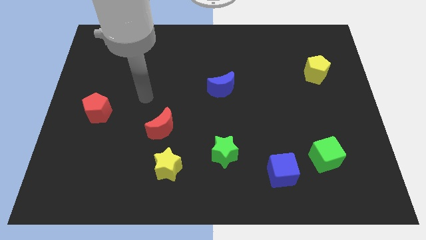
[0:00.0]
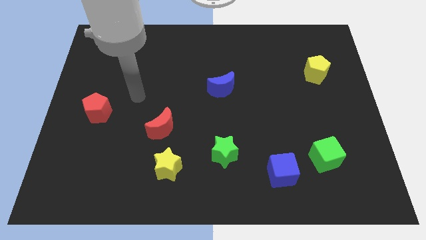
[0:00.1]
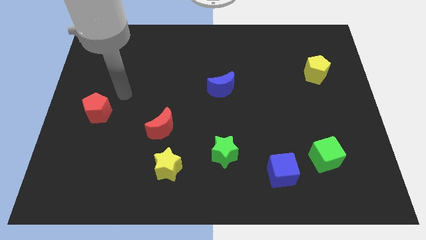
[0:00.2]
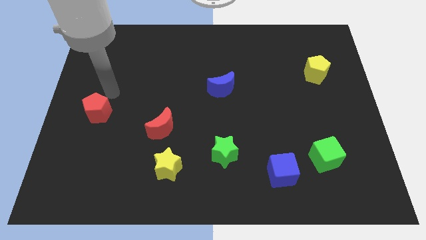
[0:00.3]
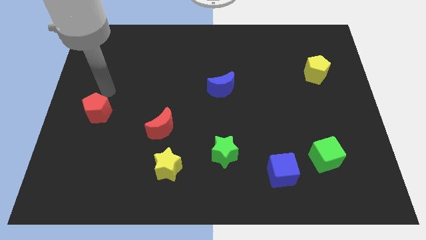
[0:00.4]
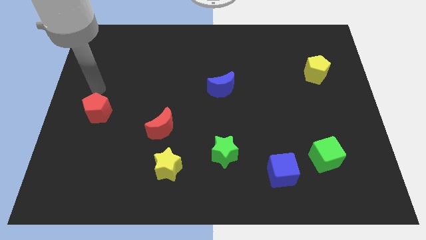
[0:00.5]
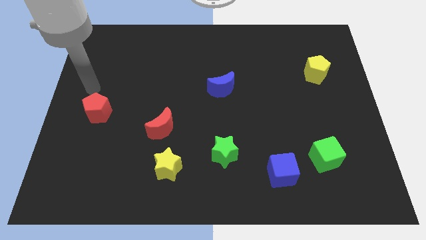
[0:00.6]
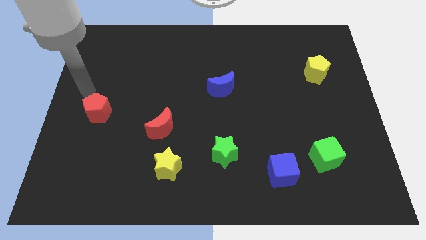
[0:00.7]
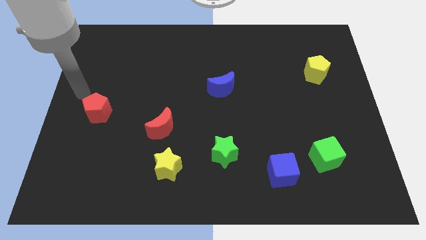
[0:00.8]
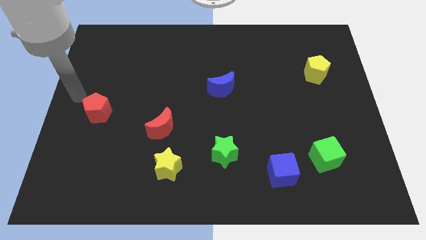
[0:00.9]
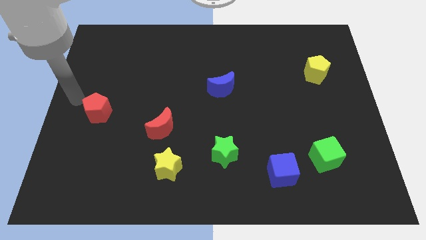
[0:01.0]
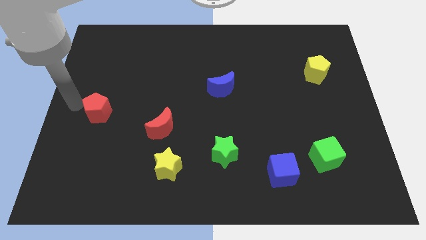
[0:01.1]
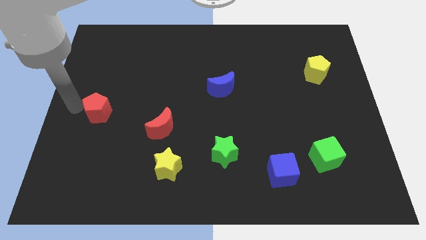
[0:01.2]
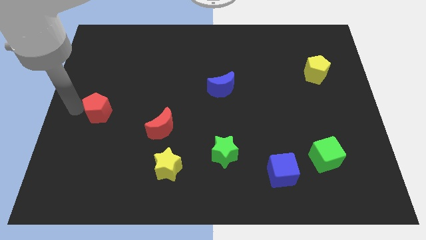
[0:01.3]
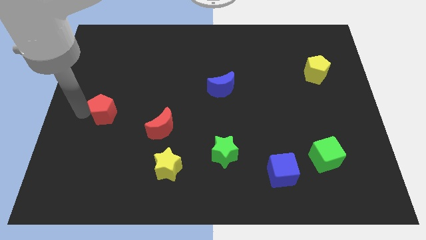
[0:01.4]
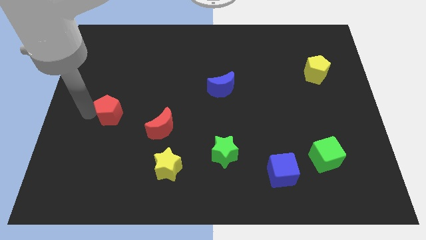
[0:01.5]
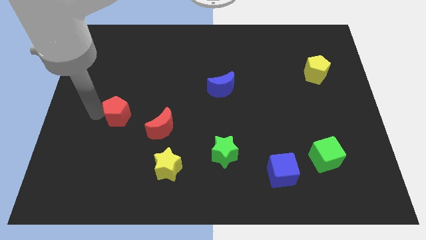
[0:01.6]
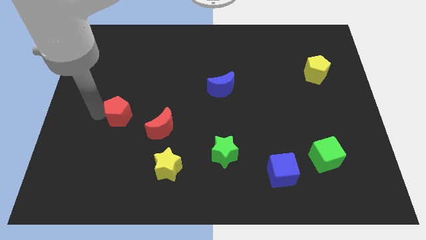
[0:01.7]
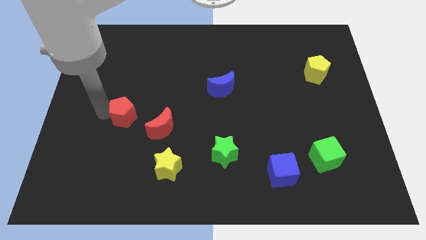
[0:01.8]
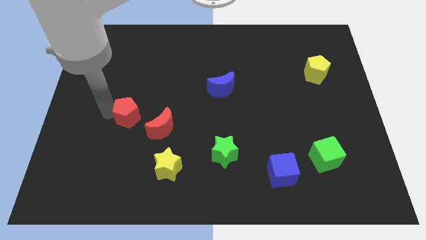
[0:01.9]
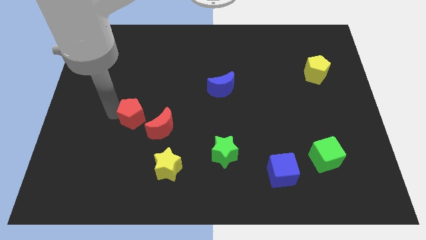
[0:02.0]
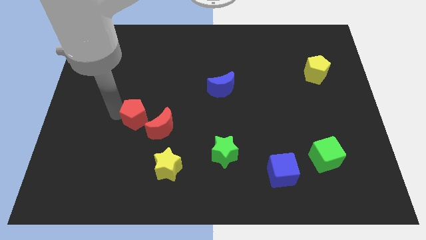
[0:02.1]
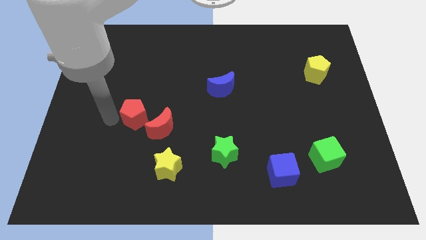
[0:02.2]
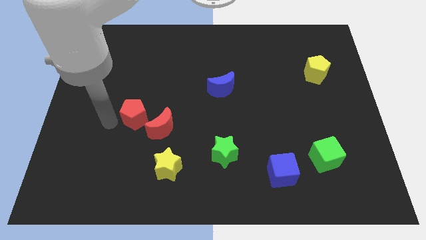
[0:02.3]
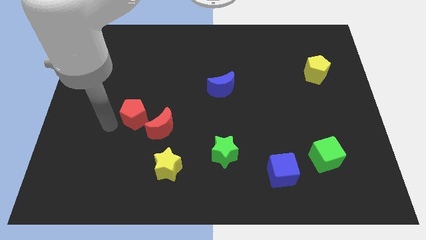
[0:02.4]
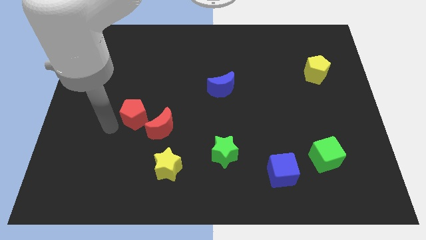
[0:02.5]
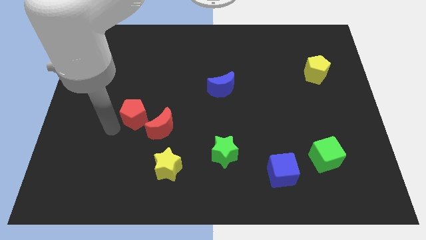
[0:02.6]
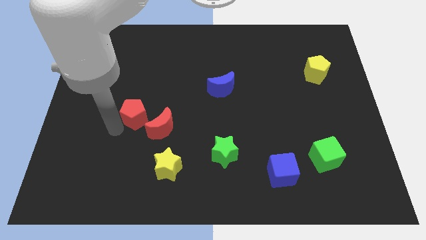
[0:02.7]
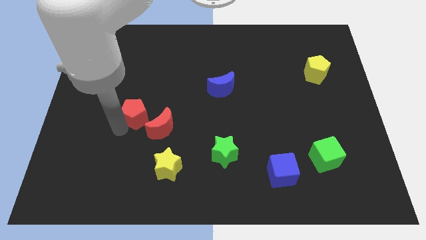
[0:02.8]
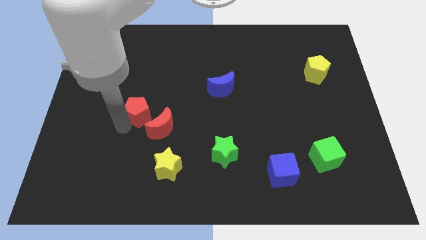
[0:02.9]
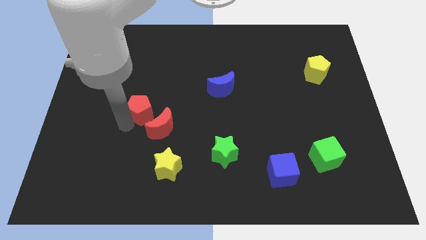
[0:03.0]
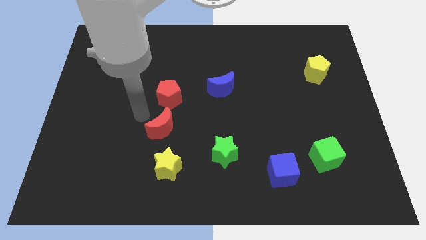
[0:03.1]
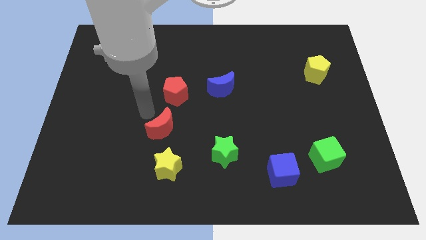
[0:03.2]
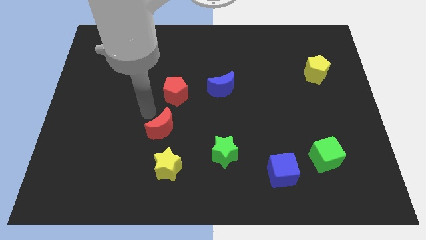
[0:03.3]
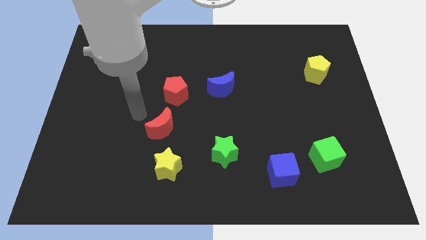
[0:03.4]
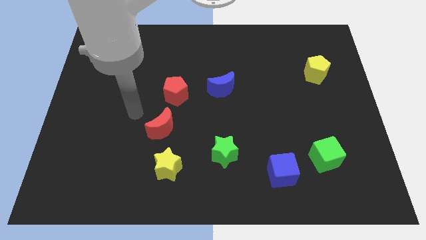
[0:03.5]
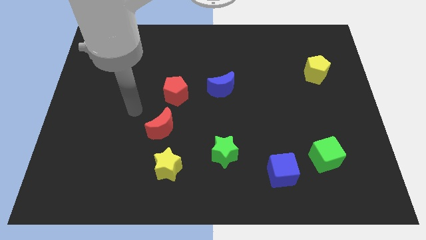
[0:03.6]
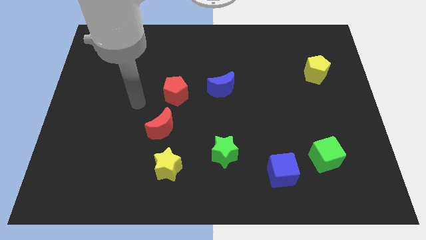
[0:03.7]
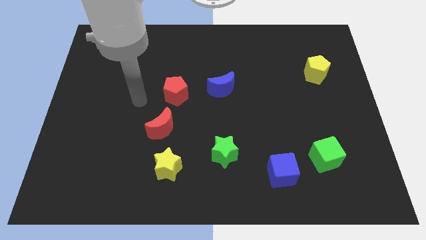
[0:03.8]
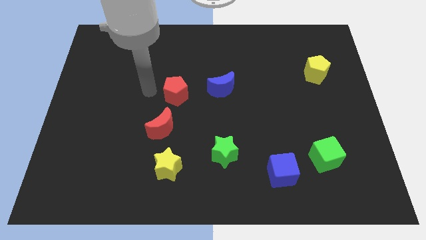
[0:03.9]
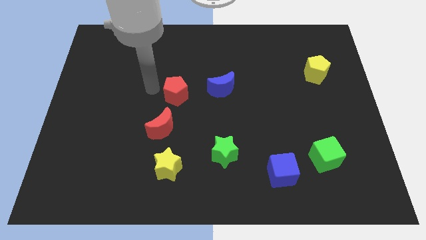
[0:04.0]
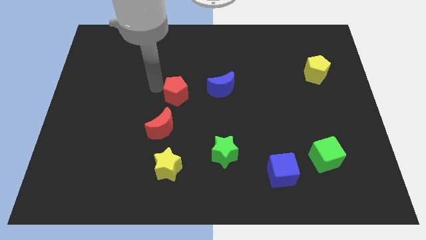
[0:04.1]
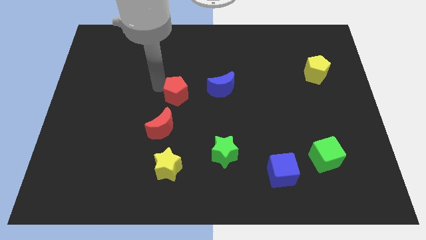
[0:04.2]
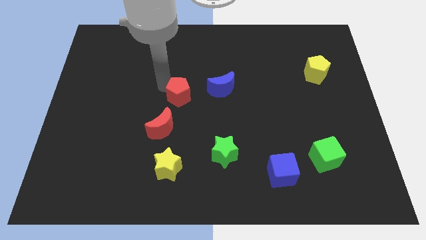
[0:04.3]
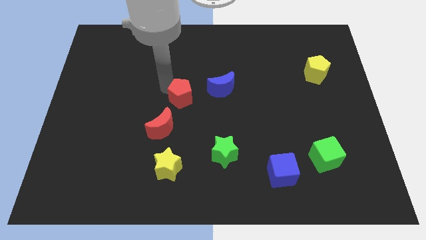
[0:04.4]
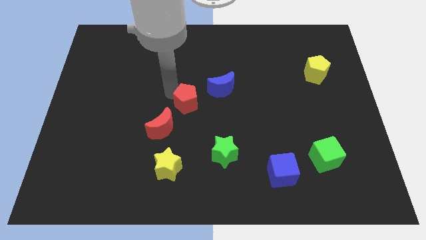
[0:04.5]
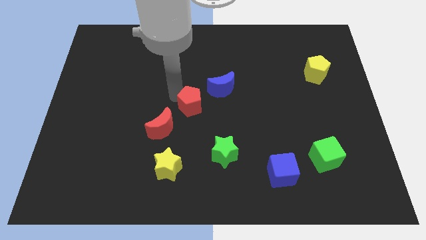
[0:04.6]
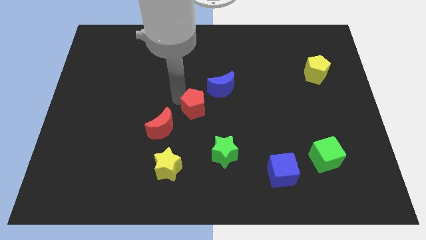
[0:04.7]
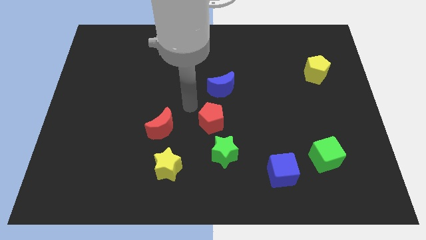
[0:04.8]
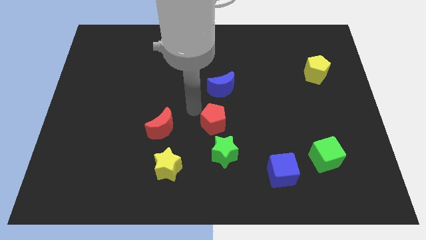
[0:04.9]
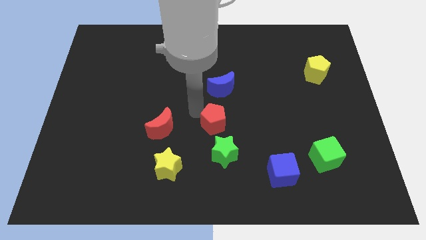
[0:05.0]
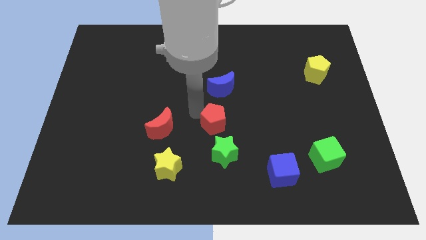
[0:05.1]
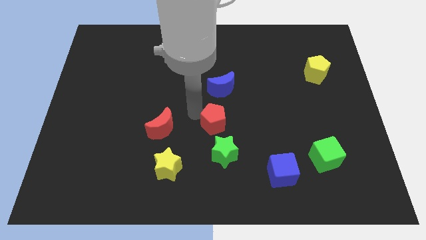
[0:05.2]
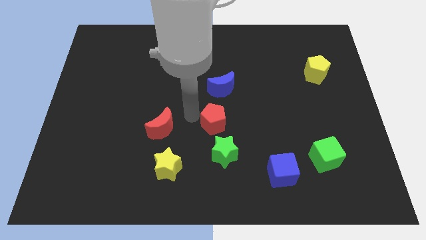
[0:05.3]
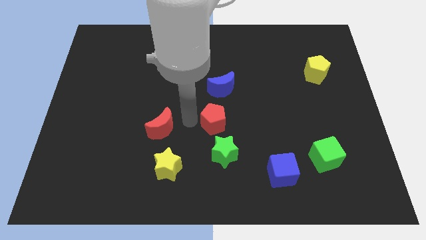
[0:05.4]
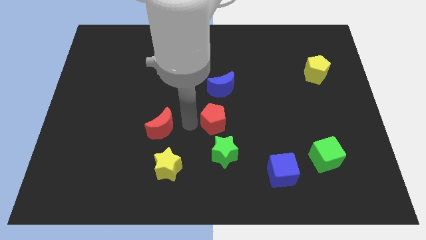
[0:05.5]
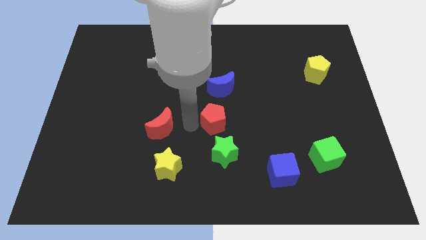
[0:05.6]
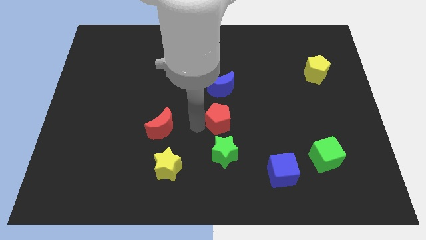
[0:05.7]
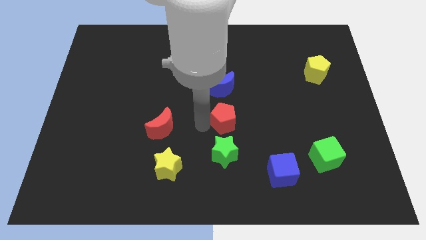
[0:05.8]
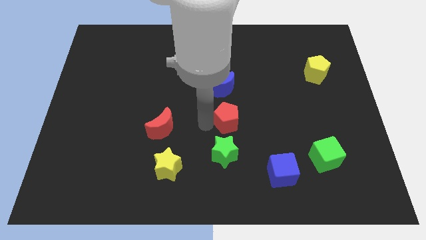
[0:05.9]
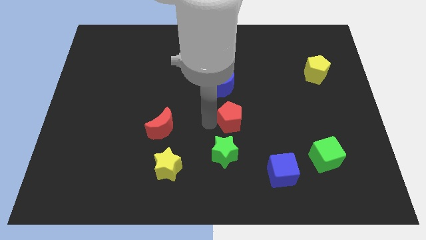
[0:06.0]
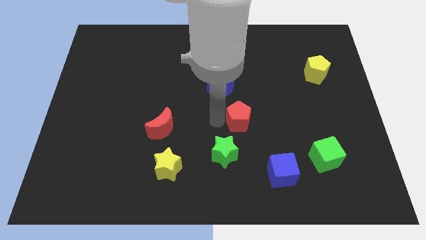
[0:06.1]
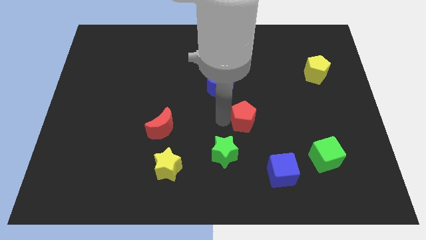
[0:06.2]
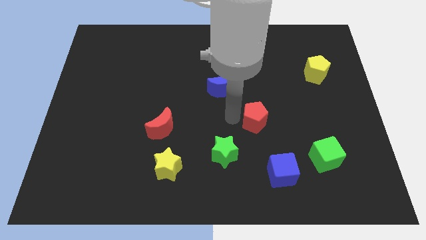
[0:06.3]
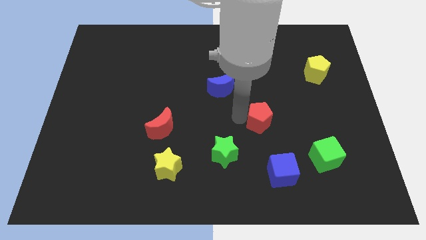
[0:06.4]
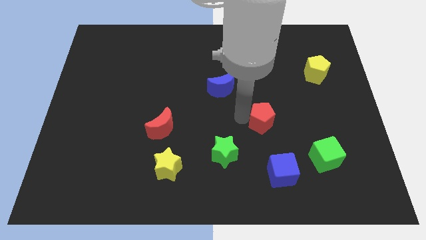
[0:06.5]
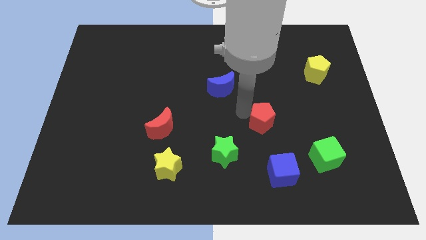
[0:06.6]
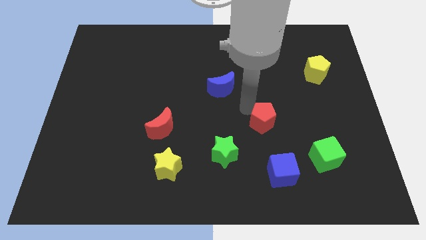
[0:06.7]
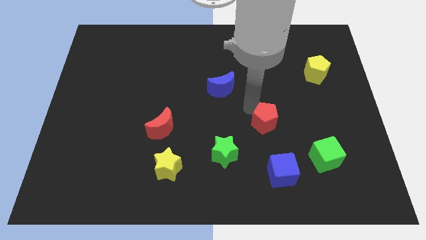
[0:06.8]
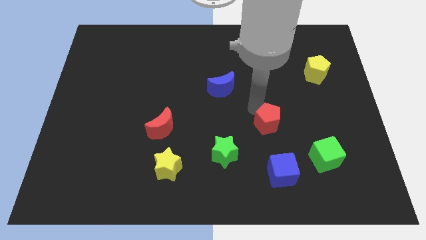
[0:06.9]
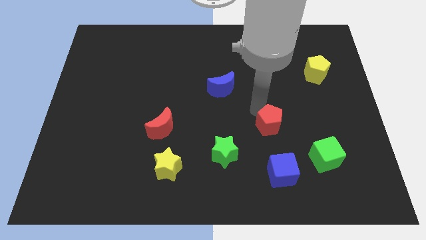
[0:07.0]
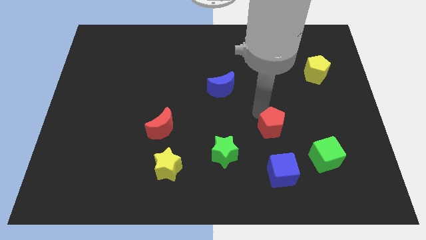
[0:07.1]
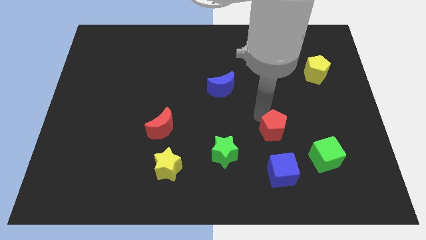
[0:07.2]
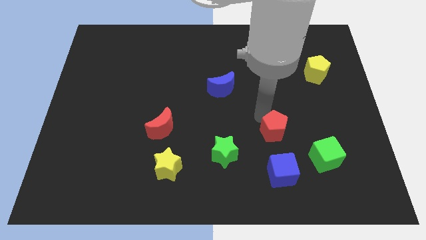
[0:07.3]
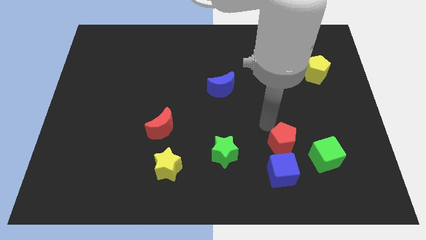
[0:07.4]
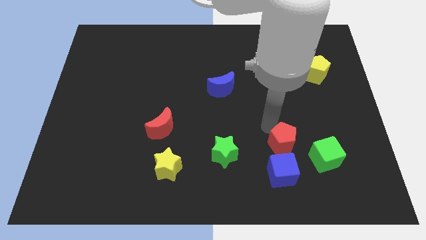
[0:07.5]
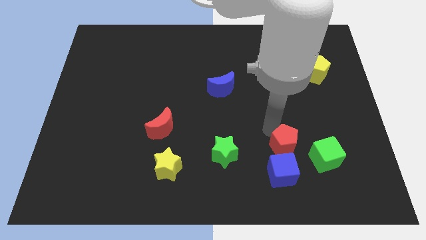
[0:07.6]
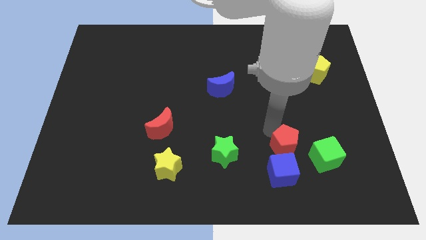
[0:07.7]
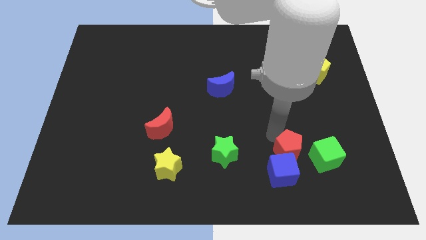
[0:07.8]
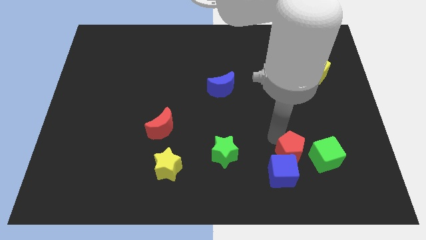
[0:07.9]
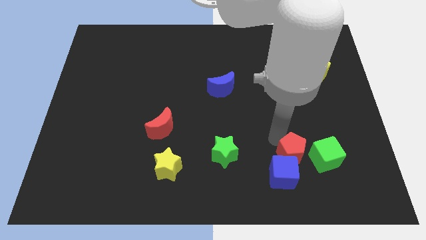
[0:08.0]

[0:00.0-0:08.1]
put the red pentagon to the blue cube

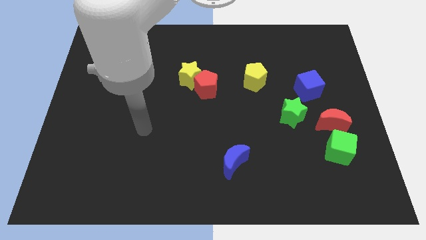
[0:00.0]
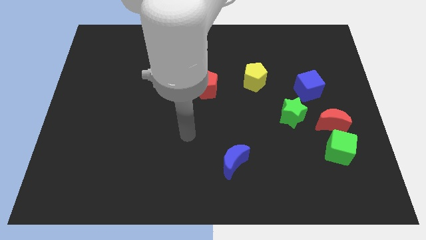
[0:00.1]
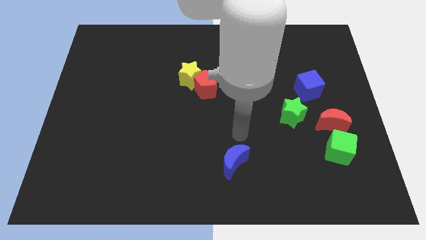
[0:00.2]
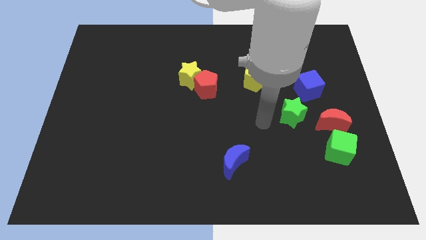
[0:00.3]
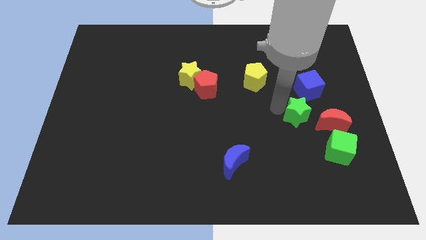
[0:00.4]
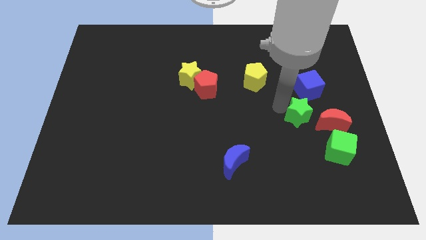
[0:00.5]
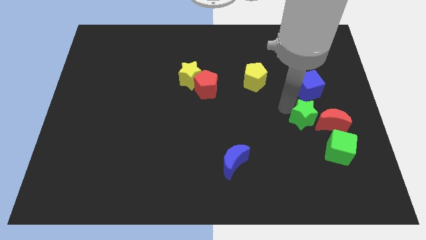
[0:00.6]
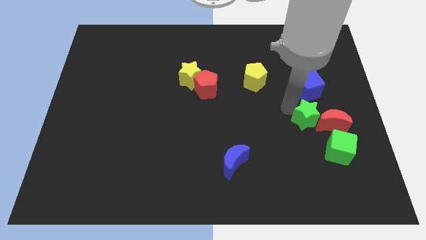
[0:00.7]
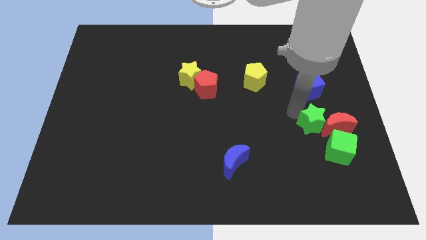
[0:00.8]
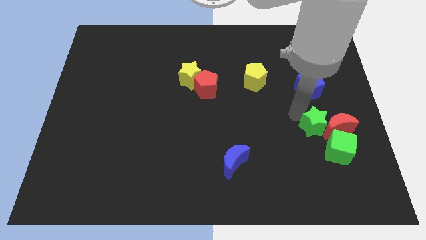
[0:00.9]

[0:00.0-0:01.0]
slide the green star next to the red moon
